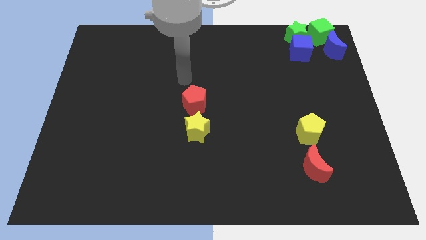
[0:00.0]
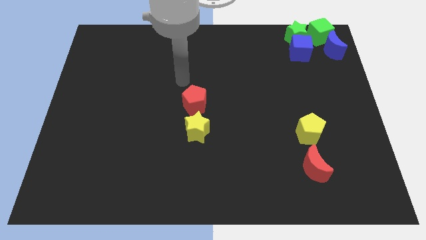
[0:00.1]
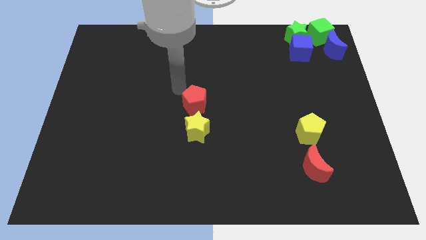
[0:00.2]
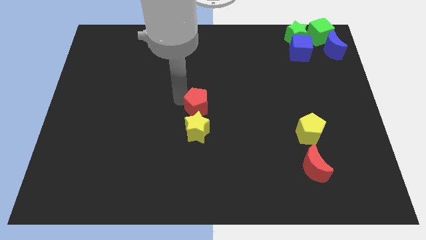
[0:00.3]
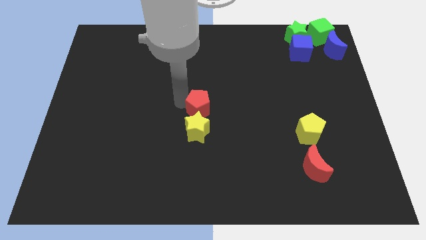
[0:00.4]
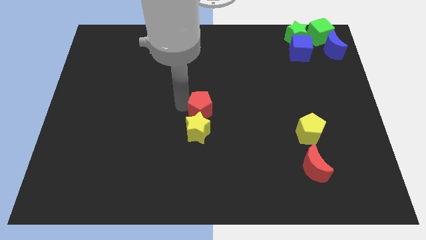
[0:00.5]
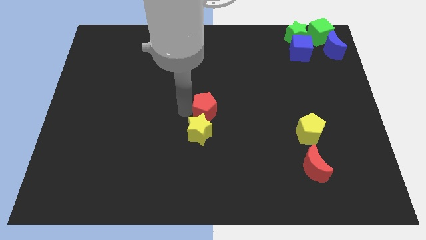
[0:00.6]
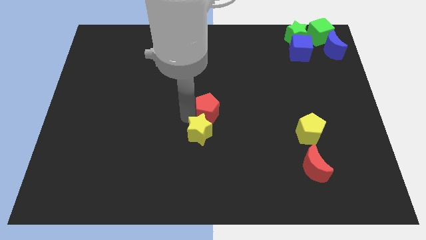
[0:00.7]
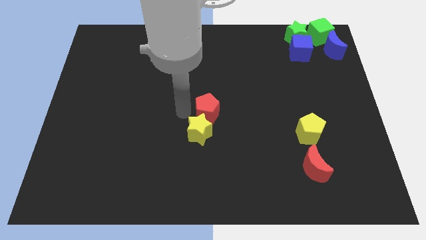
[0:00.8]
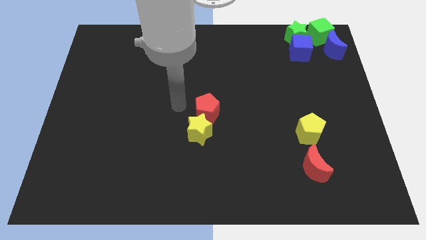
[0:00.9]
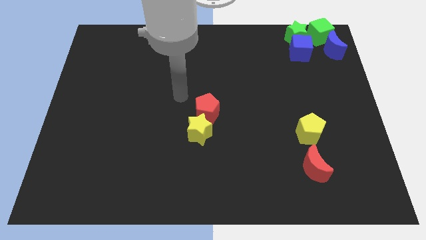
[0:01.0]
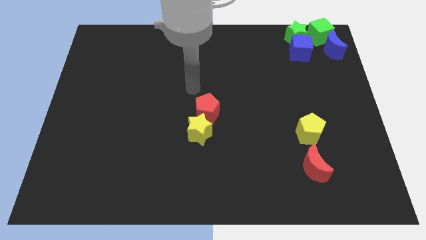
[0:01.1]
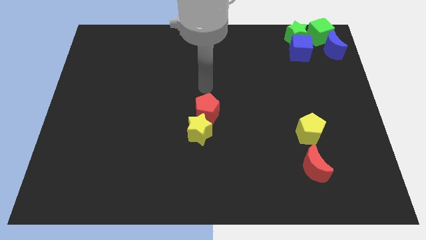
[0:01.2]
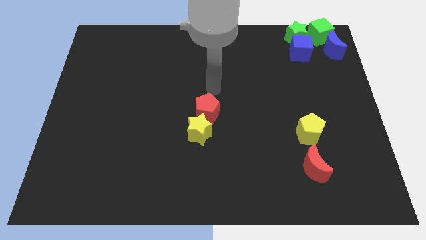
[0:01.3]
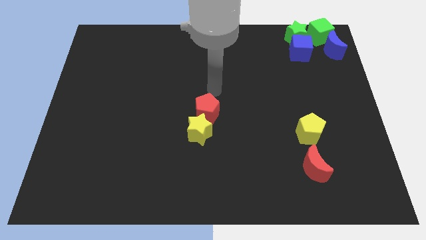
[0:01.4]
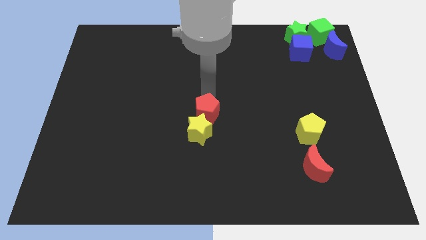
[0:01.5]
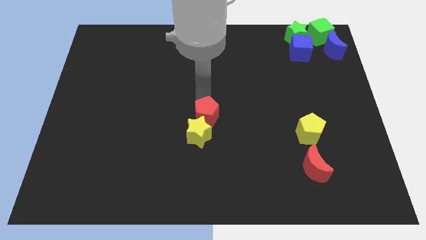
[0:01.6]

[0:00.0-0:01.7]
push red pentagon into yellow star

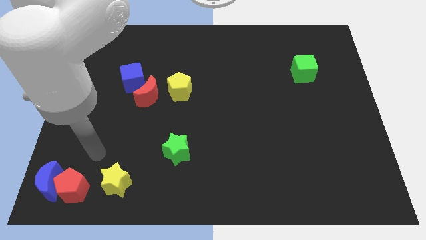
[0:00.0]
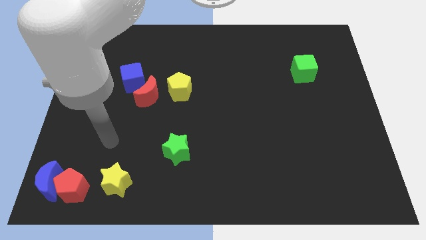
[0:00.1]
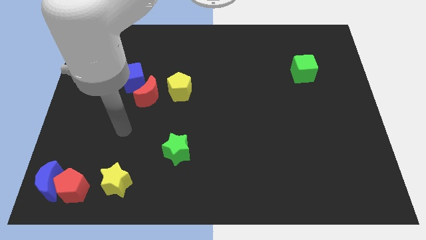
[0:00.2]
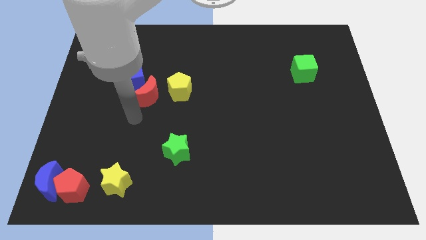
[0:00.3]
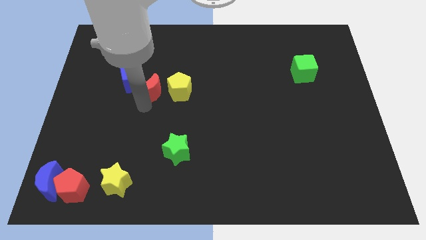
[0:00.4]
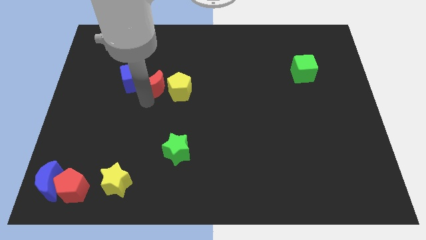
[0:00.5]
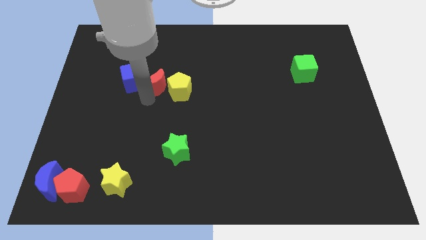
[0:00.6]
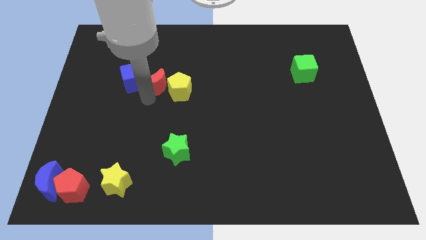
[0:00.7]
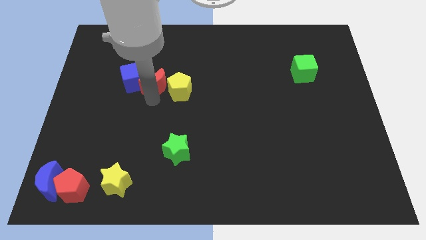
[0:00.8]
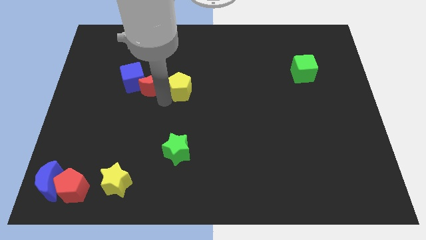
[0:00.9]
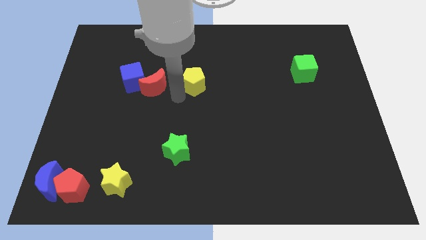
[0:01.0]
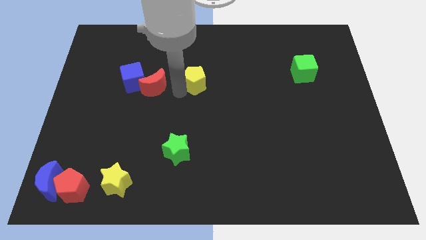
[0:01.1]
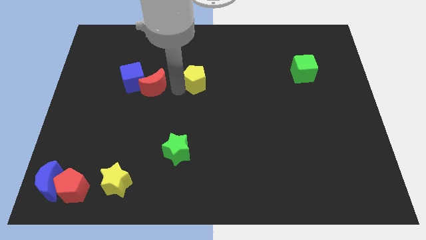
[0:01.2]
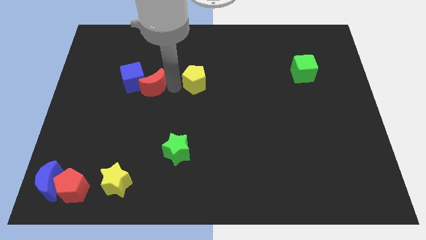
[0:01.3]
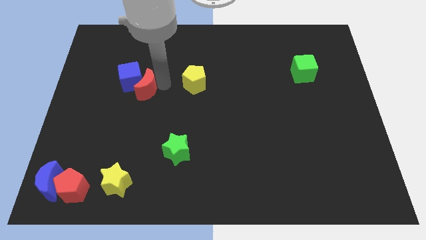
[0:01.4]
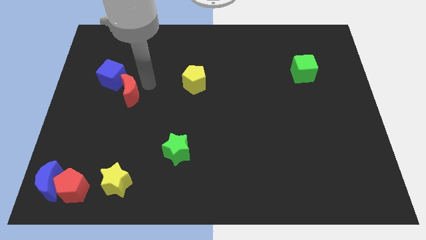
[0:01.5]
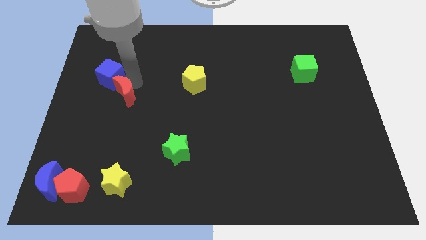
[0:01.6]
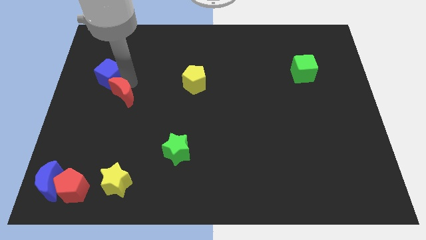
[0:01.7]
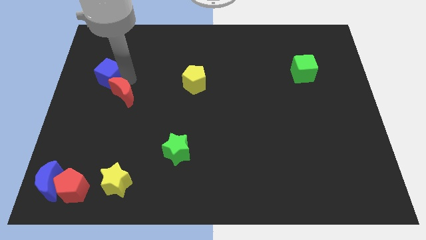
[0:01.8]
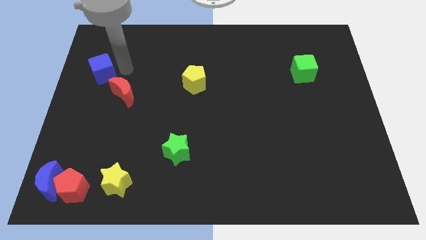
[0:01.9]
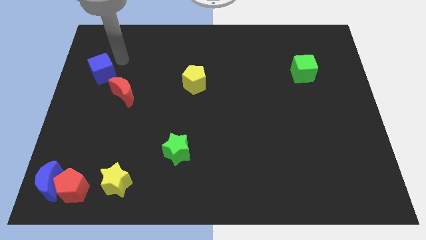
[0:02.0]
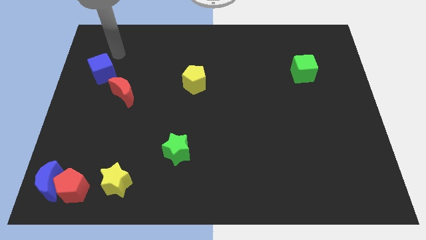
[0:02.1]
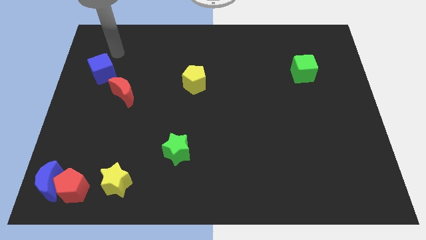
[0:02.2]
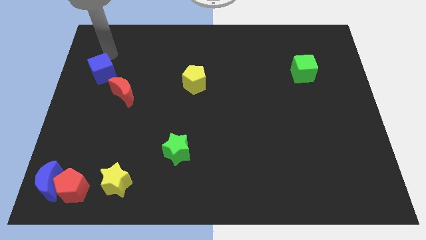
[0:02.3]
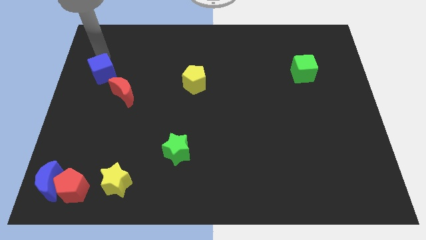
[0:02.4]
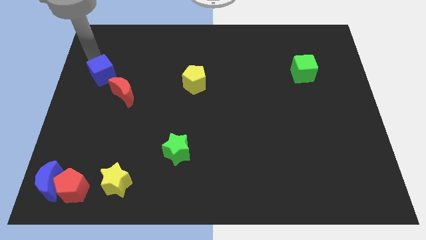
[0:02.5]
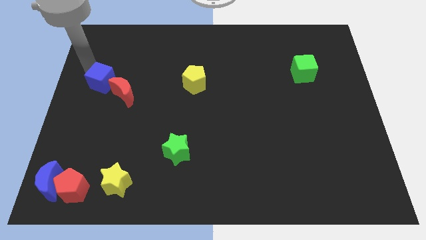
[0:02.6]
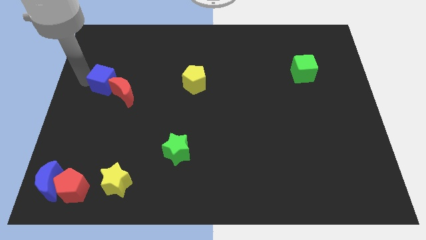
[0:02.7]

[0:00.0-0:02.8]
separate yellow pentagon from red crescent

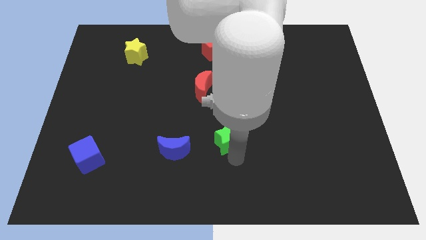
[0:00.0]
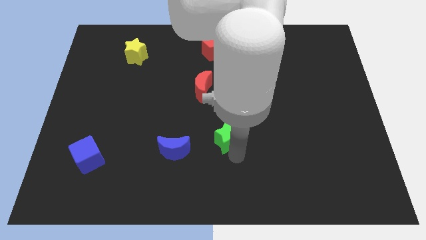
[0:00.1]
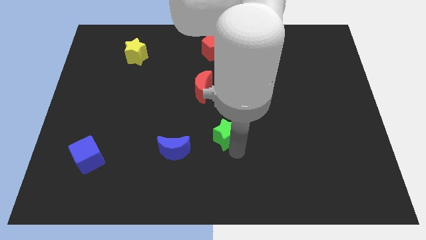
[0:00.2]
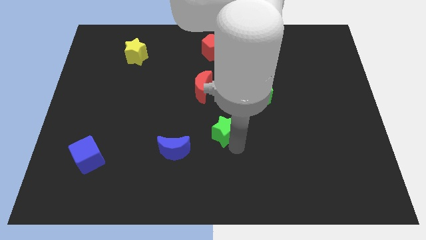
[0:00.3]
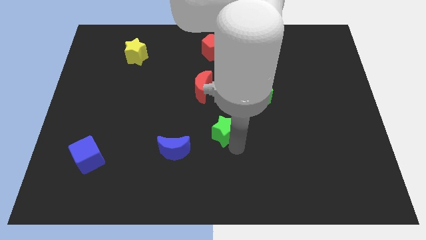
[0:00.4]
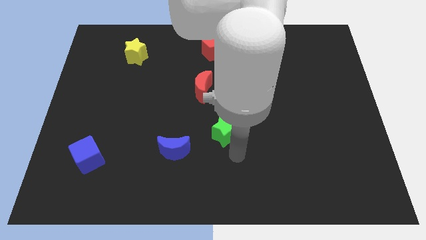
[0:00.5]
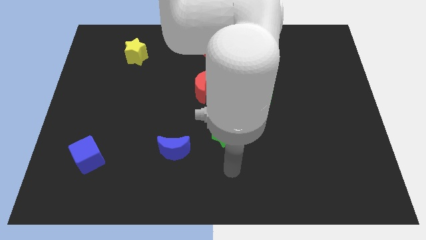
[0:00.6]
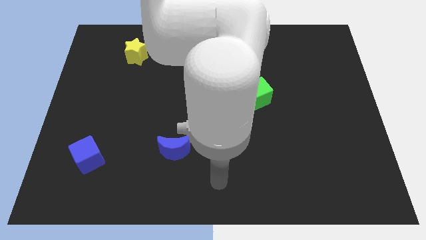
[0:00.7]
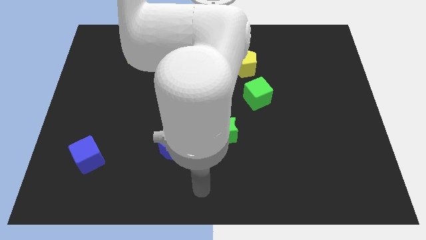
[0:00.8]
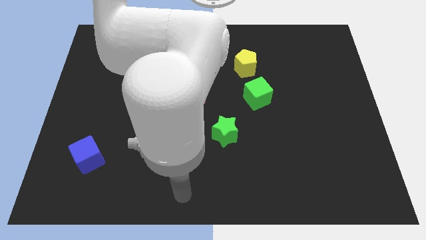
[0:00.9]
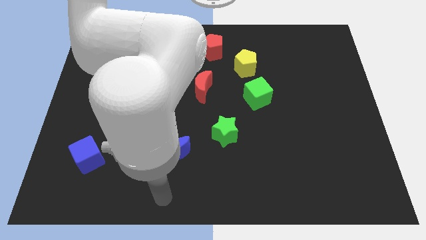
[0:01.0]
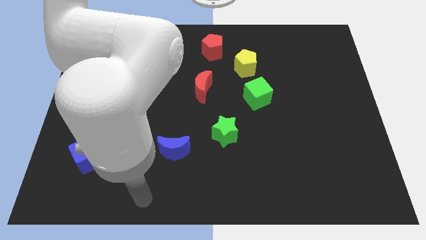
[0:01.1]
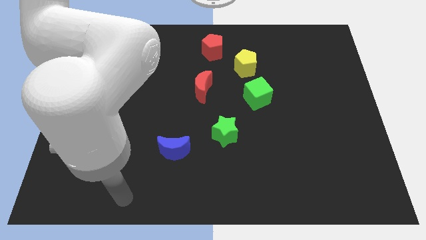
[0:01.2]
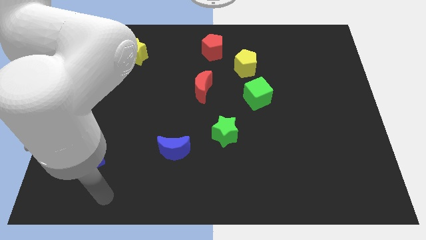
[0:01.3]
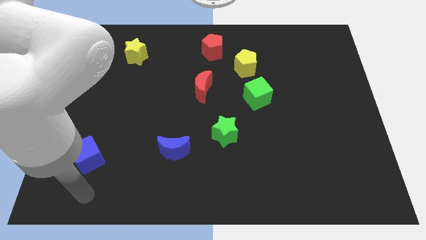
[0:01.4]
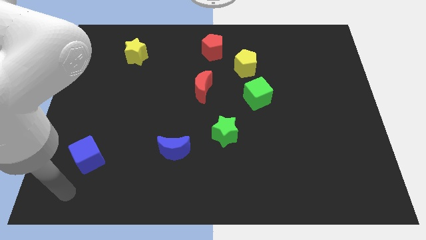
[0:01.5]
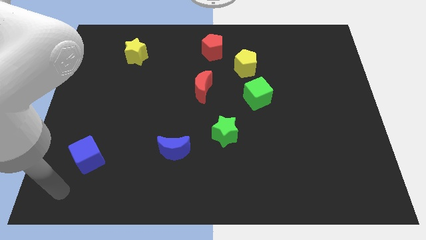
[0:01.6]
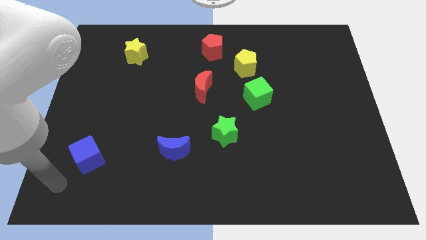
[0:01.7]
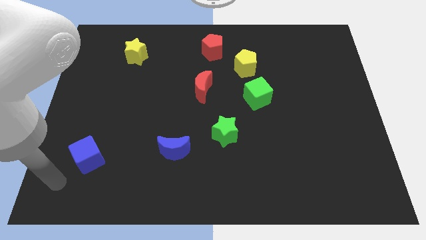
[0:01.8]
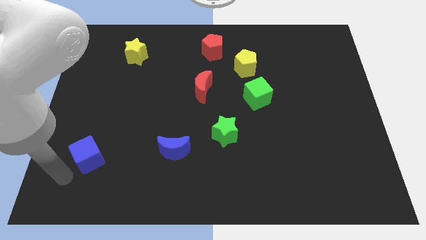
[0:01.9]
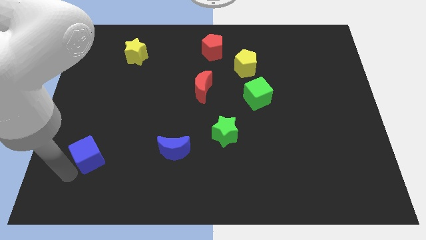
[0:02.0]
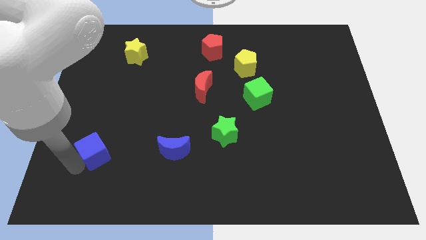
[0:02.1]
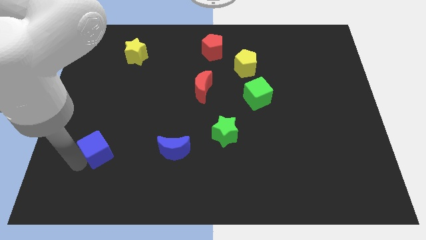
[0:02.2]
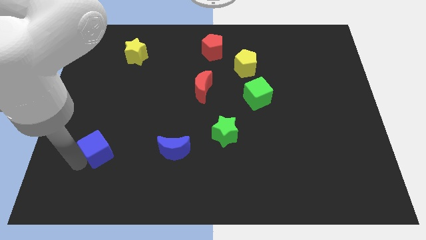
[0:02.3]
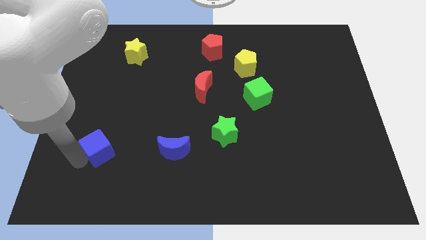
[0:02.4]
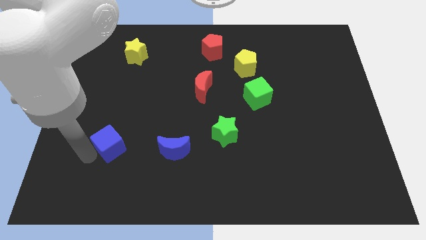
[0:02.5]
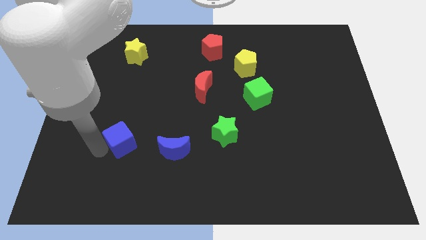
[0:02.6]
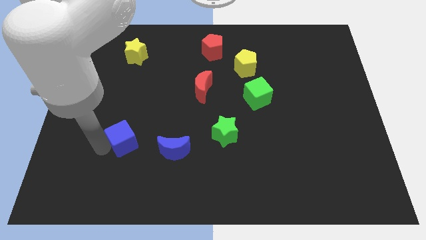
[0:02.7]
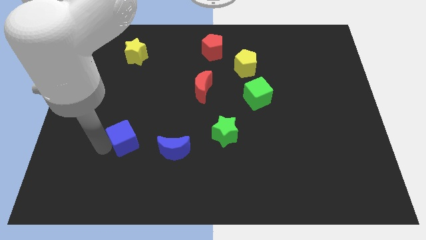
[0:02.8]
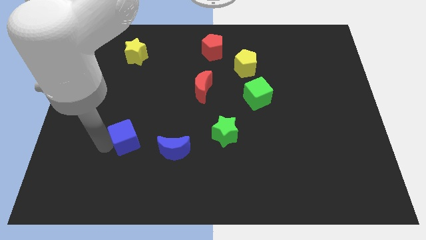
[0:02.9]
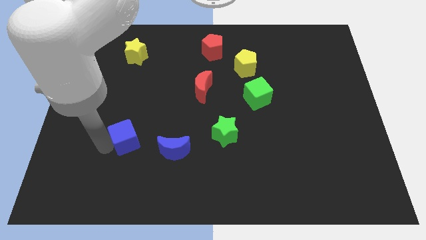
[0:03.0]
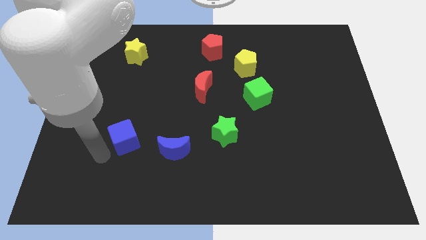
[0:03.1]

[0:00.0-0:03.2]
move the blue cube towards the center

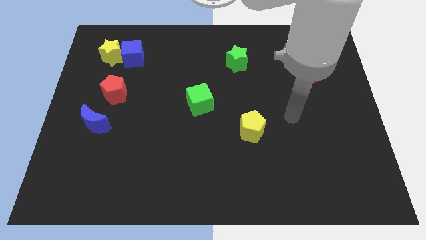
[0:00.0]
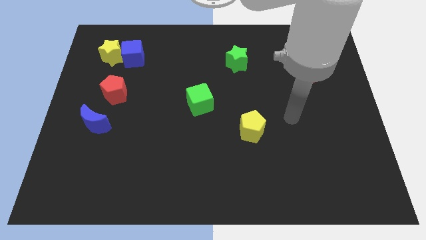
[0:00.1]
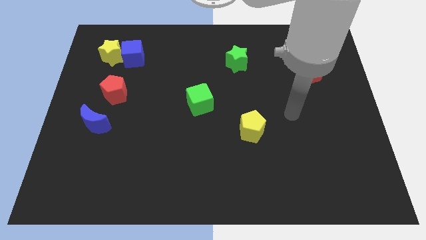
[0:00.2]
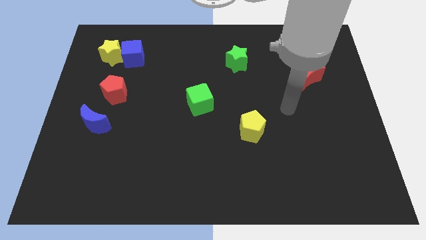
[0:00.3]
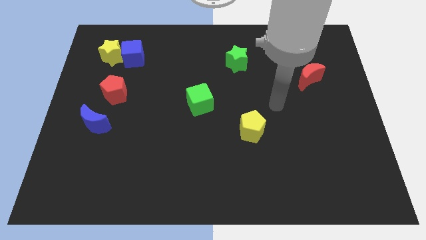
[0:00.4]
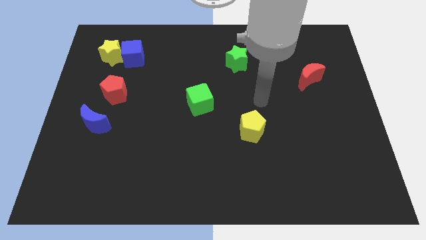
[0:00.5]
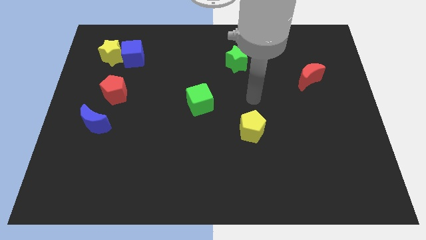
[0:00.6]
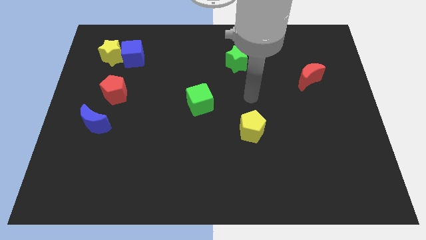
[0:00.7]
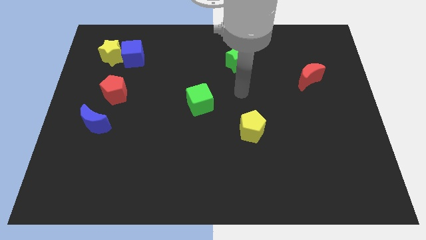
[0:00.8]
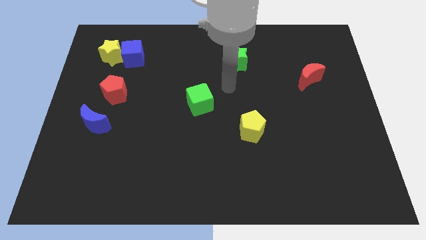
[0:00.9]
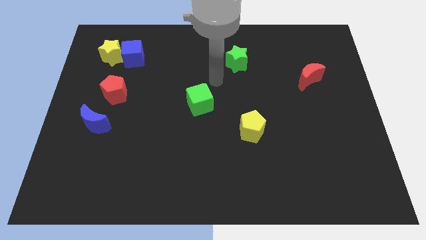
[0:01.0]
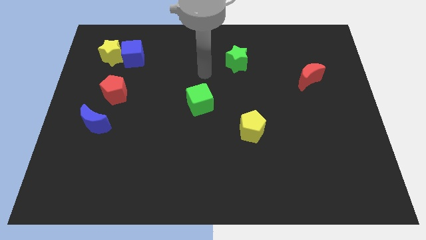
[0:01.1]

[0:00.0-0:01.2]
place the arm in between the green blocks

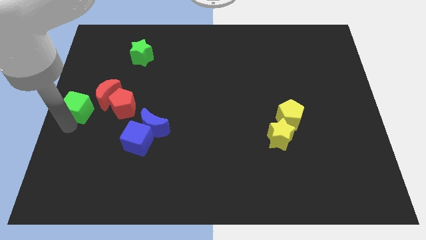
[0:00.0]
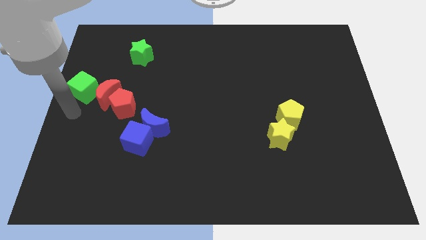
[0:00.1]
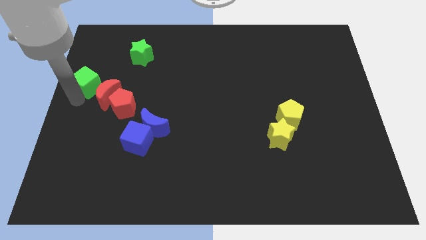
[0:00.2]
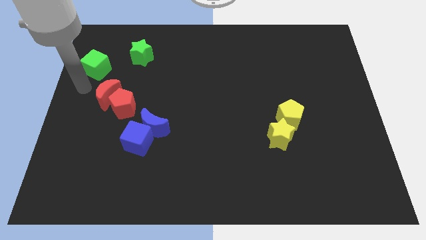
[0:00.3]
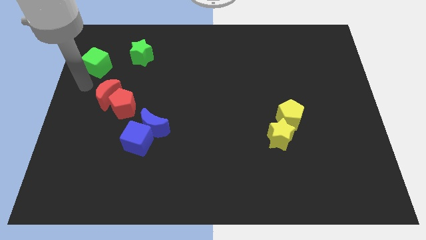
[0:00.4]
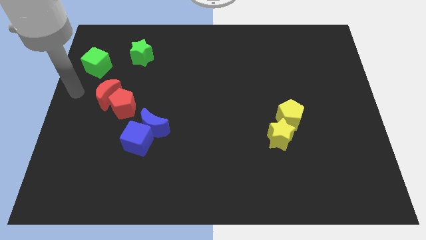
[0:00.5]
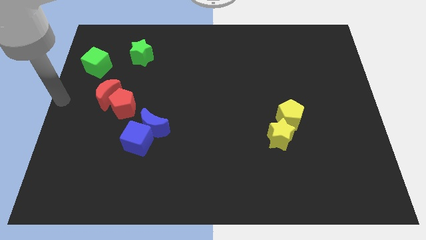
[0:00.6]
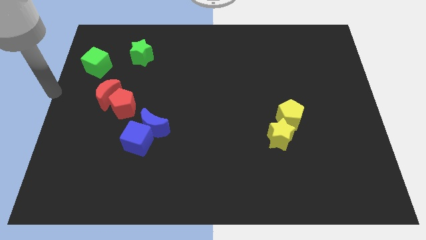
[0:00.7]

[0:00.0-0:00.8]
place the green cube diagonal to the red moon
